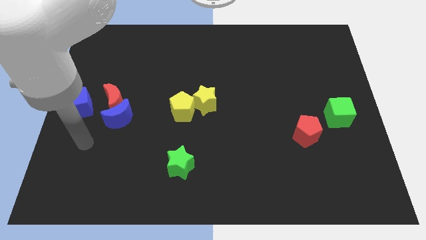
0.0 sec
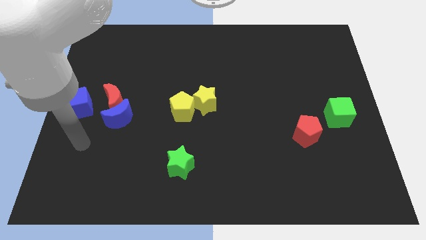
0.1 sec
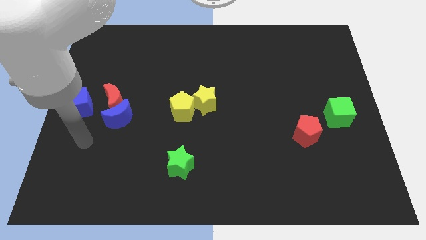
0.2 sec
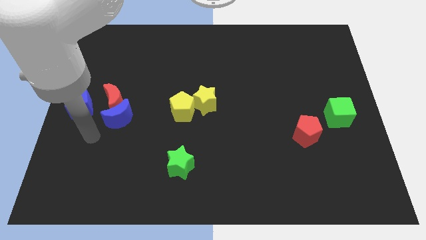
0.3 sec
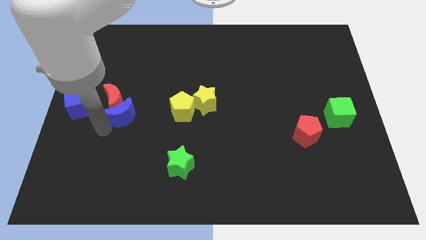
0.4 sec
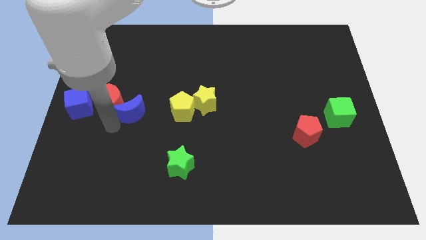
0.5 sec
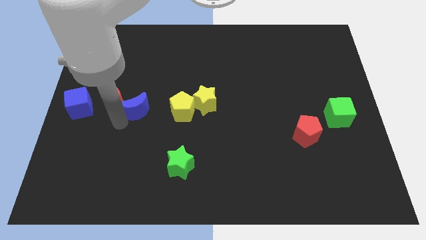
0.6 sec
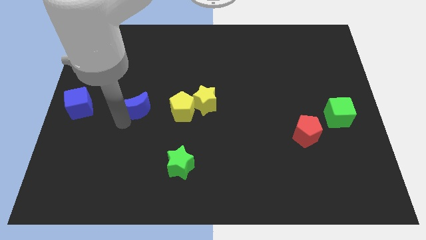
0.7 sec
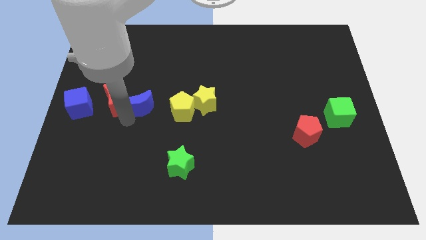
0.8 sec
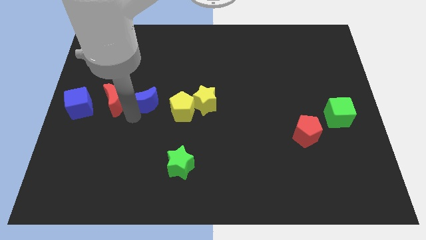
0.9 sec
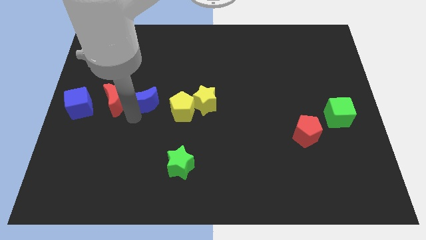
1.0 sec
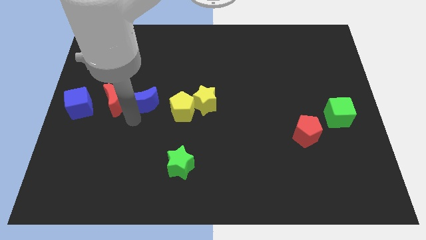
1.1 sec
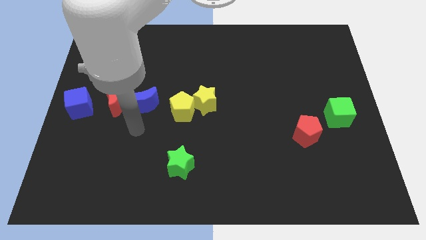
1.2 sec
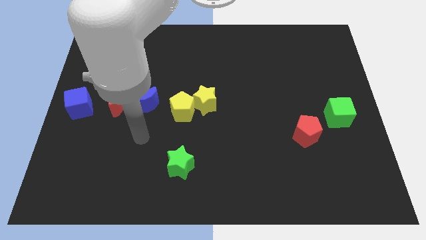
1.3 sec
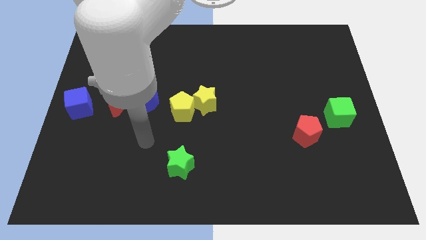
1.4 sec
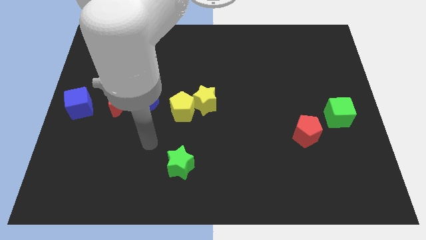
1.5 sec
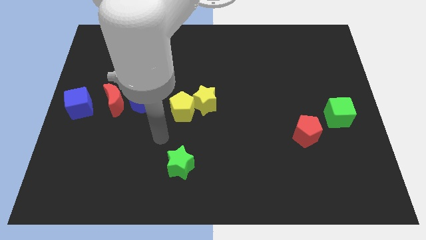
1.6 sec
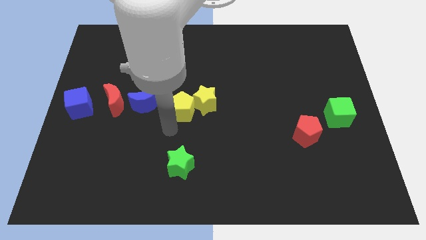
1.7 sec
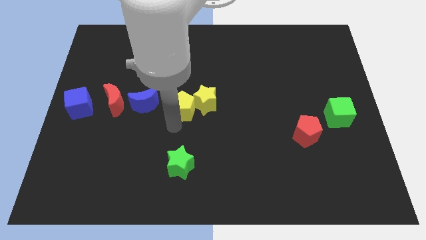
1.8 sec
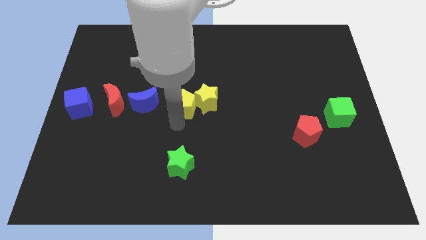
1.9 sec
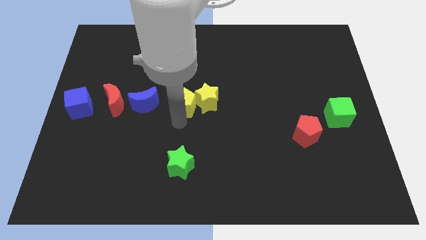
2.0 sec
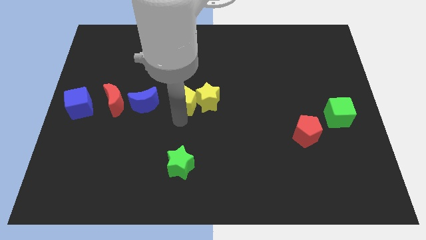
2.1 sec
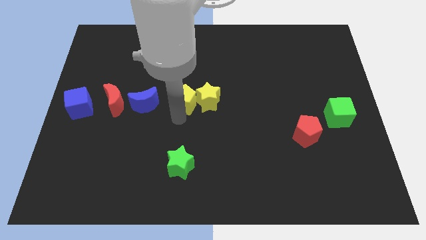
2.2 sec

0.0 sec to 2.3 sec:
move the blue crescent to the right of the red crescent

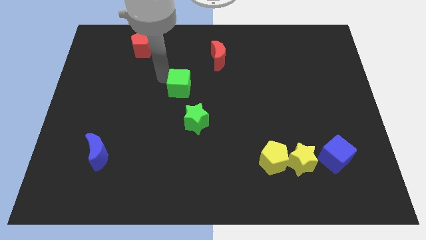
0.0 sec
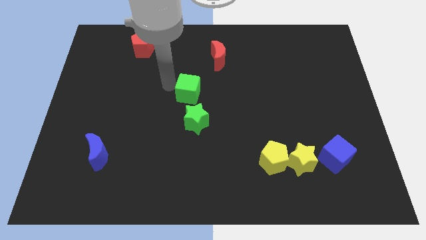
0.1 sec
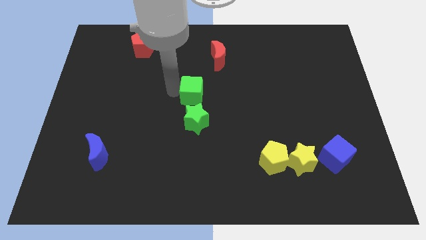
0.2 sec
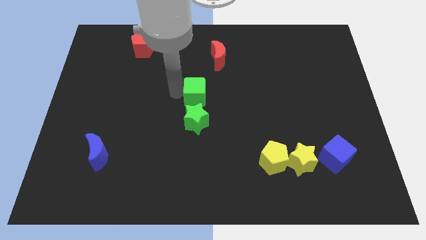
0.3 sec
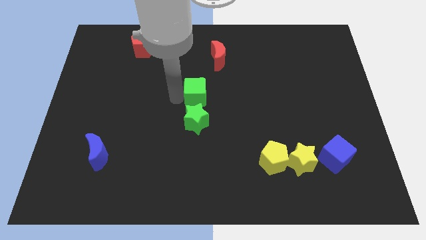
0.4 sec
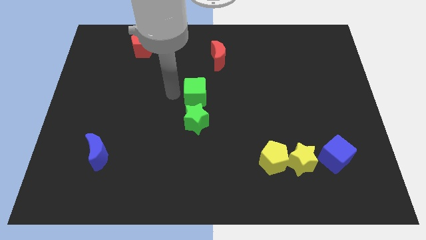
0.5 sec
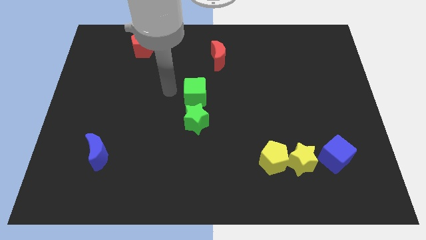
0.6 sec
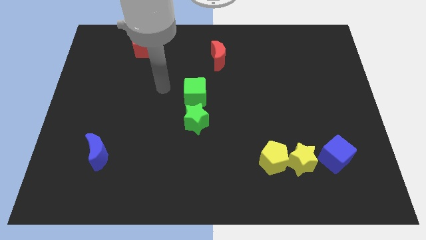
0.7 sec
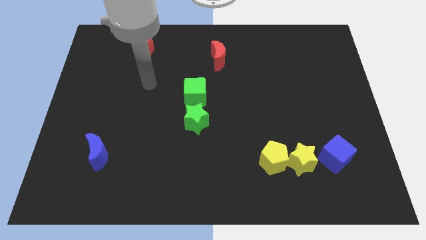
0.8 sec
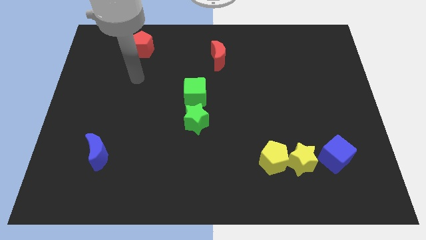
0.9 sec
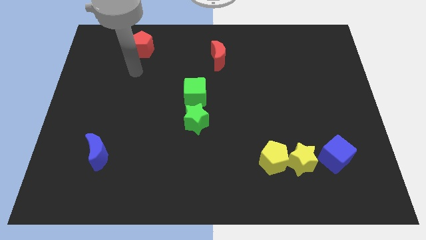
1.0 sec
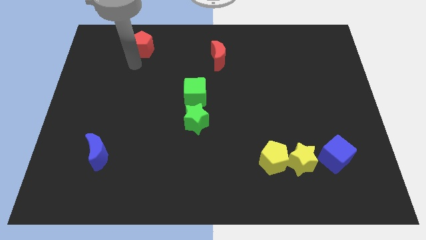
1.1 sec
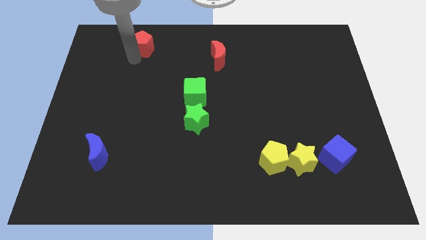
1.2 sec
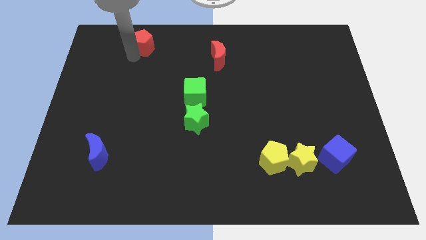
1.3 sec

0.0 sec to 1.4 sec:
put the green cube above the green star

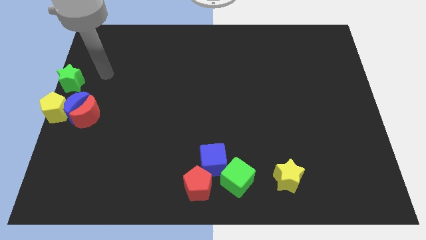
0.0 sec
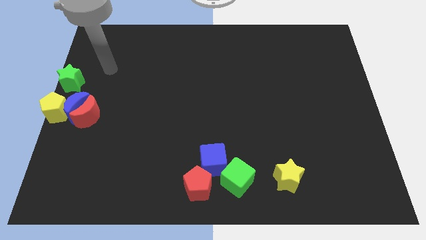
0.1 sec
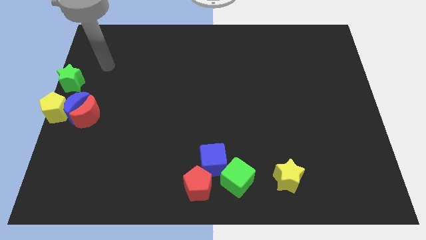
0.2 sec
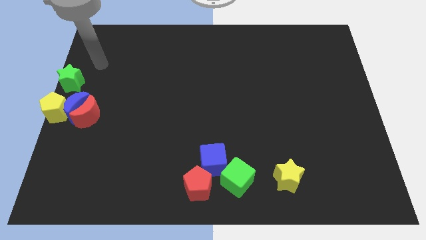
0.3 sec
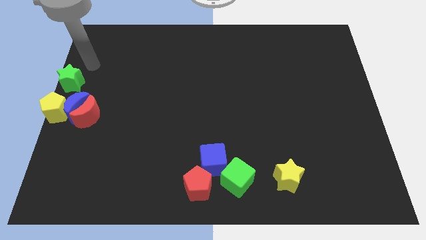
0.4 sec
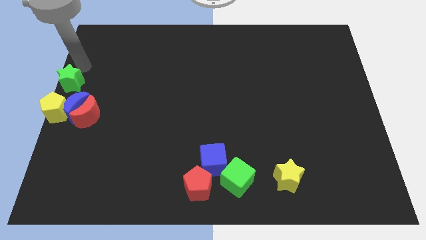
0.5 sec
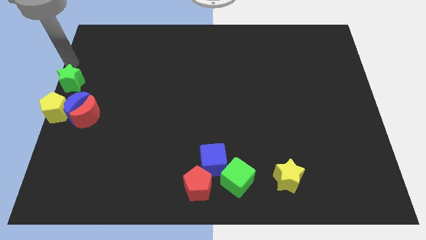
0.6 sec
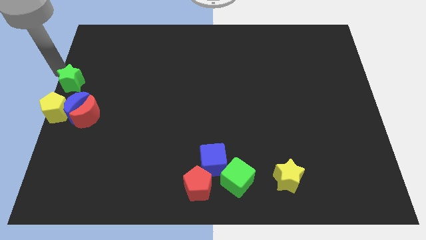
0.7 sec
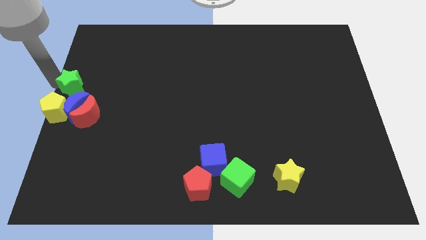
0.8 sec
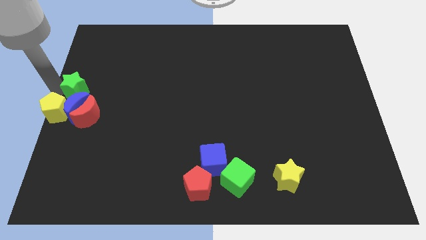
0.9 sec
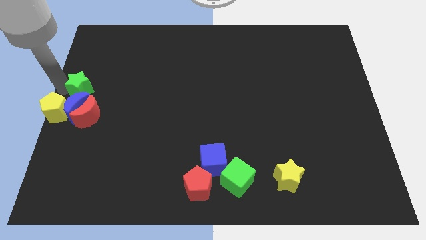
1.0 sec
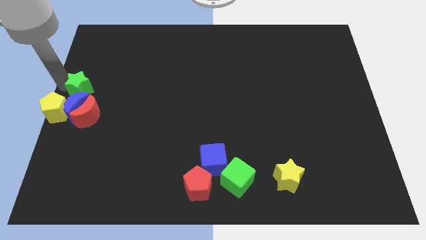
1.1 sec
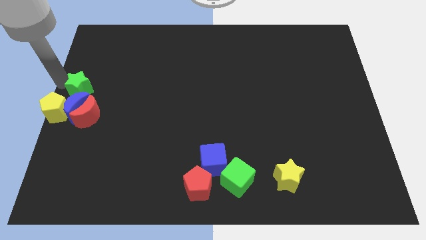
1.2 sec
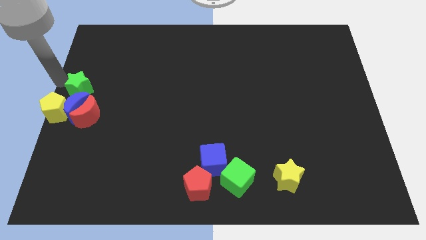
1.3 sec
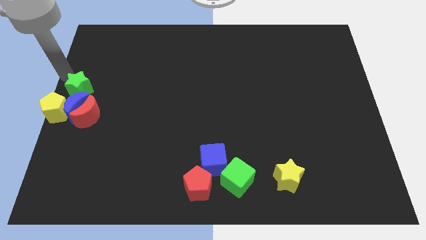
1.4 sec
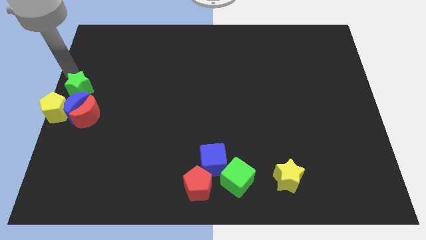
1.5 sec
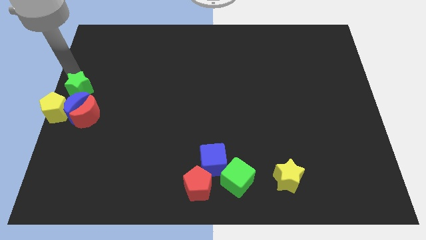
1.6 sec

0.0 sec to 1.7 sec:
slightly push the green star towards the blue moon

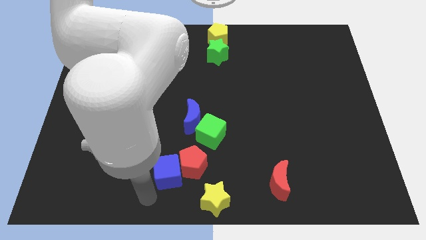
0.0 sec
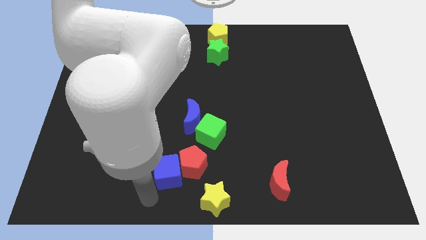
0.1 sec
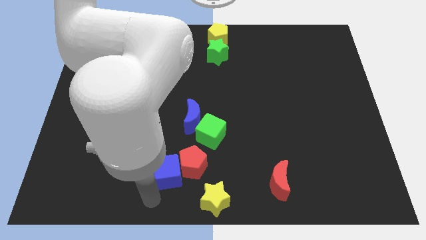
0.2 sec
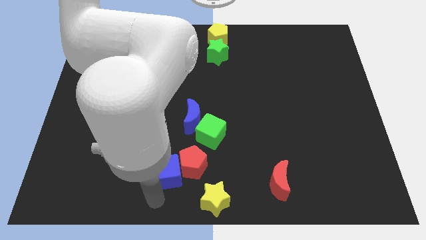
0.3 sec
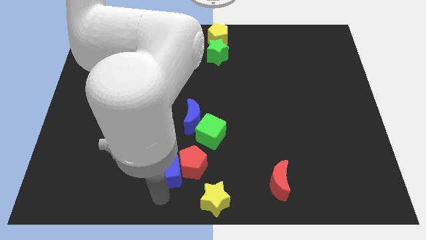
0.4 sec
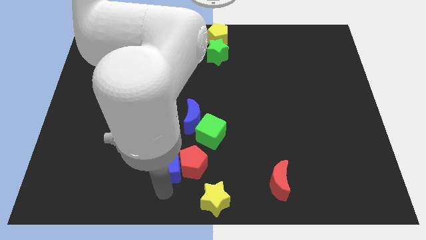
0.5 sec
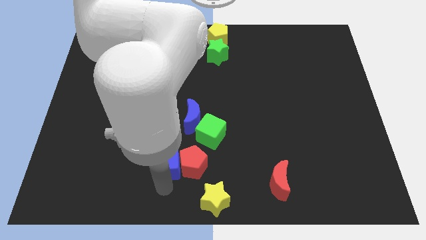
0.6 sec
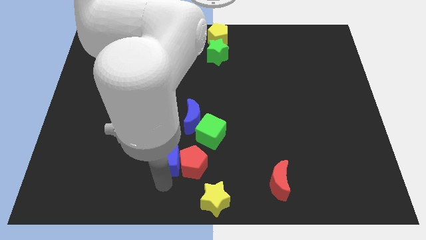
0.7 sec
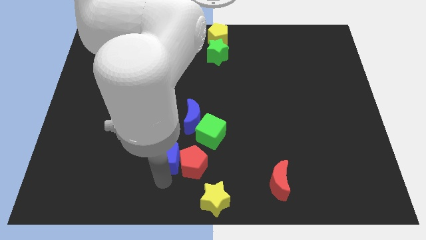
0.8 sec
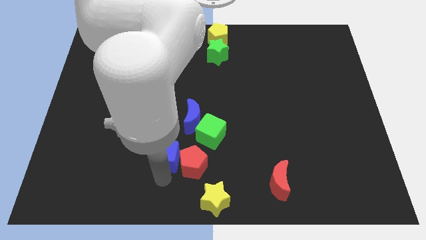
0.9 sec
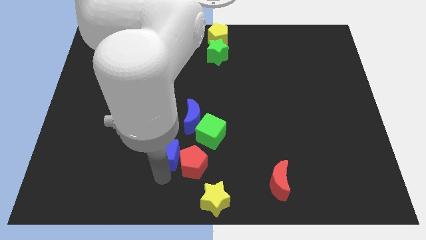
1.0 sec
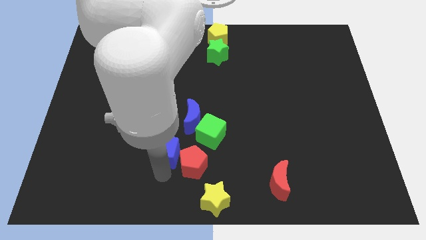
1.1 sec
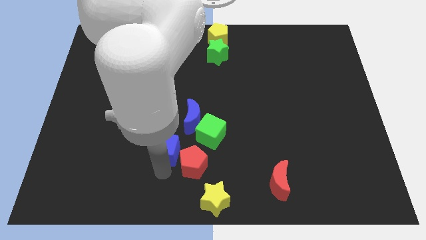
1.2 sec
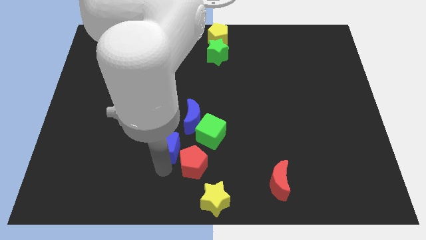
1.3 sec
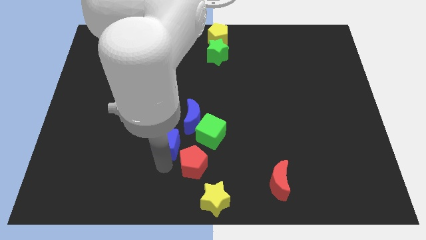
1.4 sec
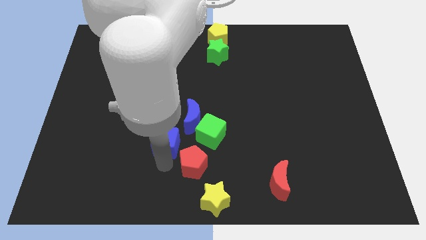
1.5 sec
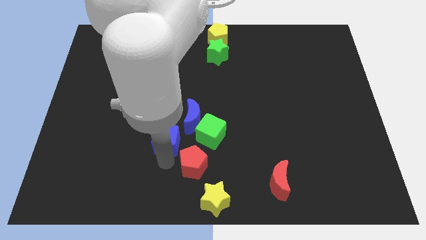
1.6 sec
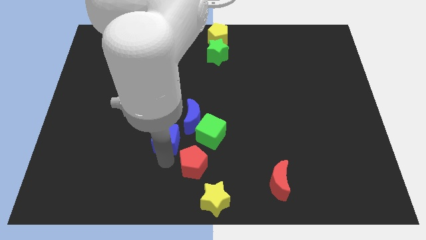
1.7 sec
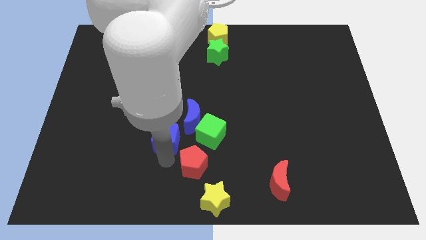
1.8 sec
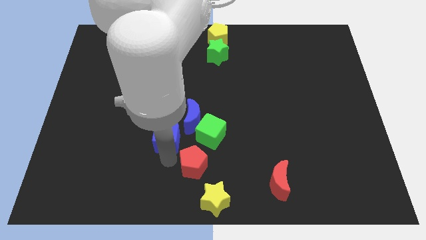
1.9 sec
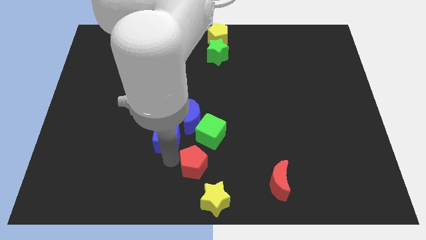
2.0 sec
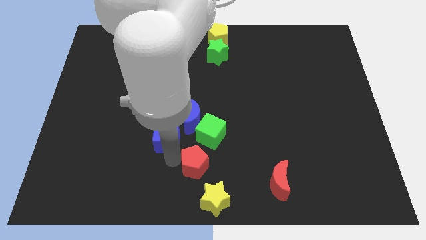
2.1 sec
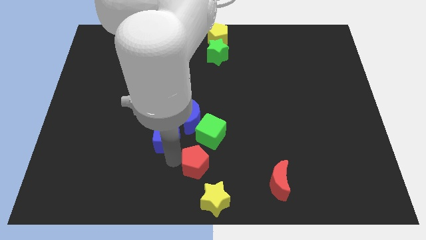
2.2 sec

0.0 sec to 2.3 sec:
place the blue cube diagonally bottom left to the blue moon

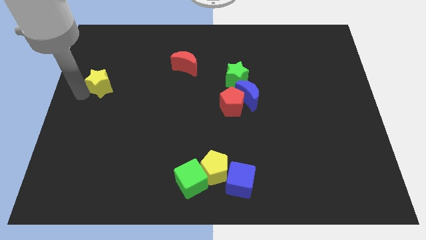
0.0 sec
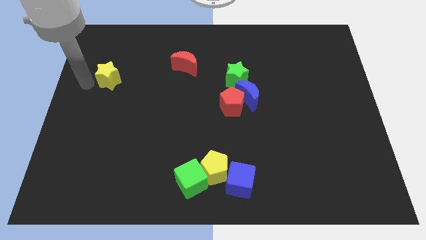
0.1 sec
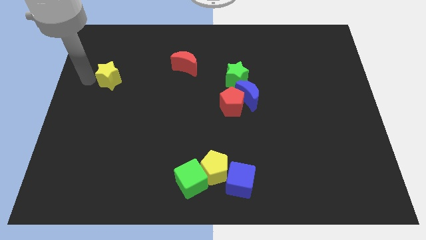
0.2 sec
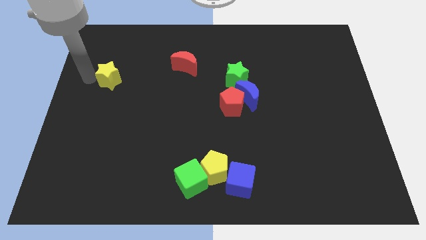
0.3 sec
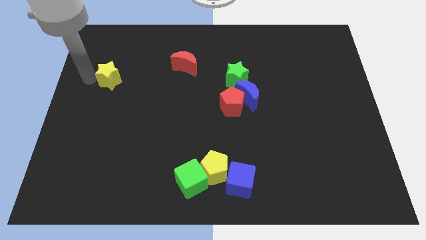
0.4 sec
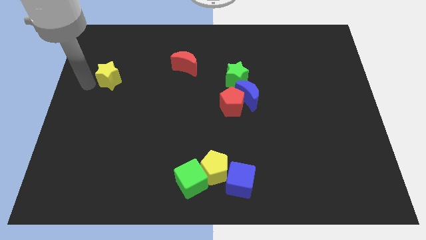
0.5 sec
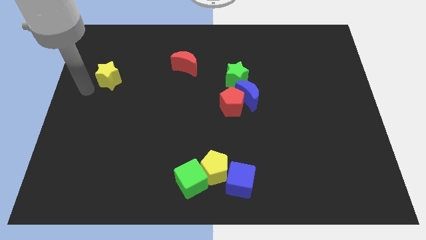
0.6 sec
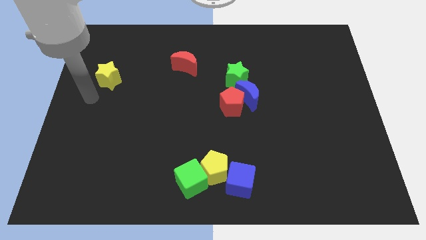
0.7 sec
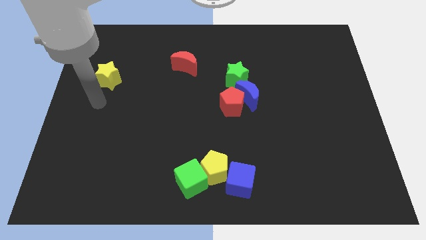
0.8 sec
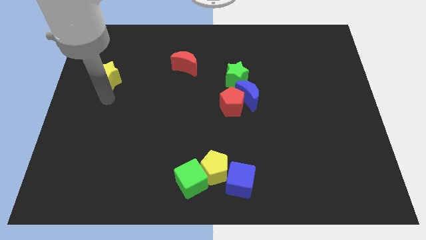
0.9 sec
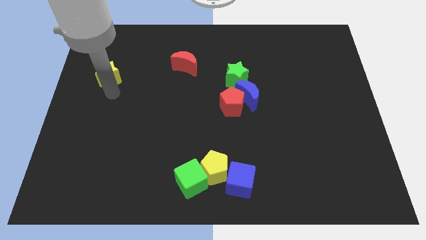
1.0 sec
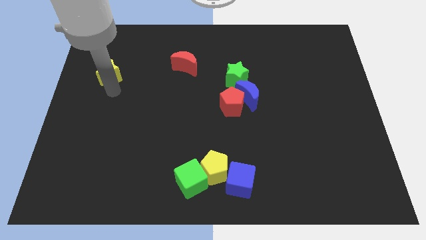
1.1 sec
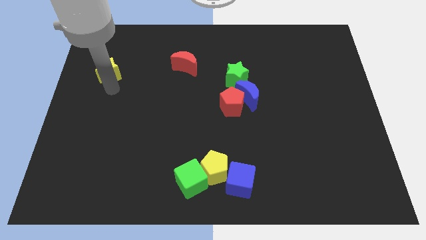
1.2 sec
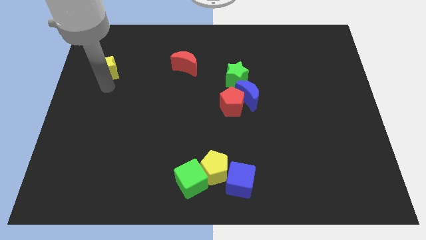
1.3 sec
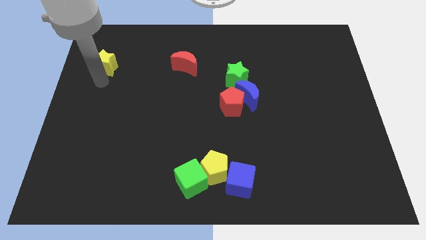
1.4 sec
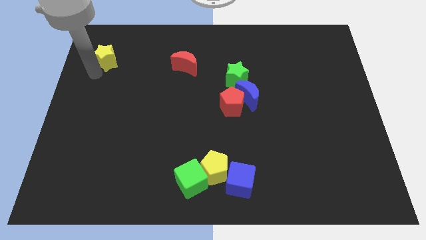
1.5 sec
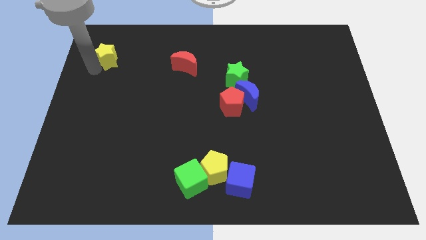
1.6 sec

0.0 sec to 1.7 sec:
place the yellow star parallel to the red moon
